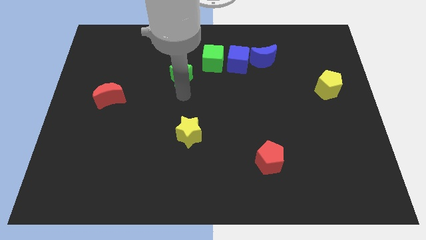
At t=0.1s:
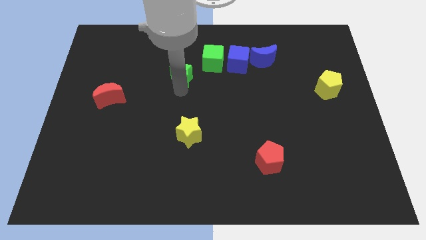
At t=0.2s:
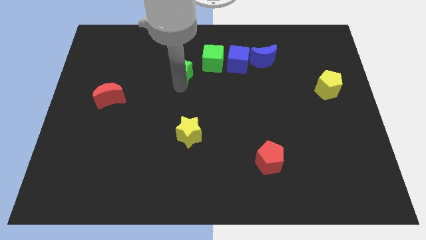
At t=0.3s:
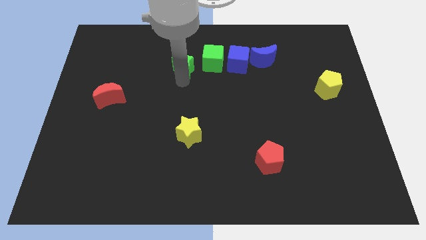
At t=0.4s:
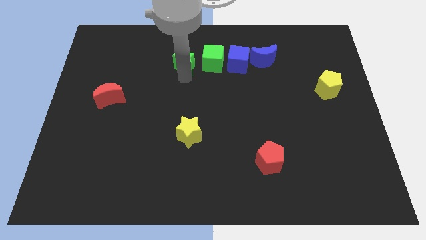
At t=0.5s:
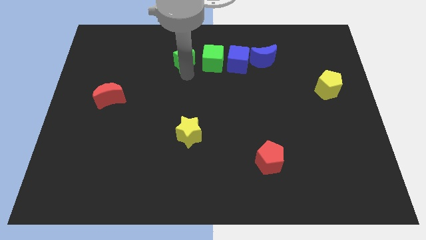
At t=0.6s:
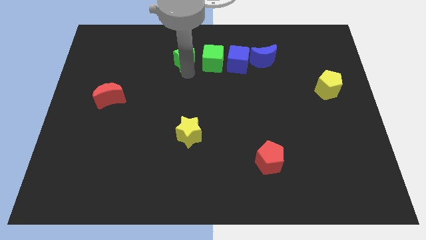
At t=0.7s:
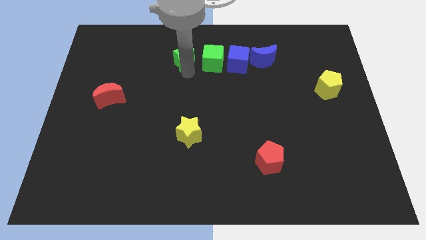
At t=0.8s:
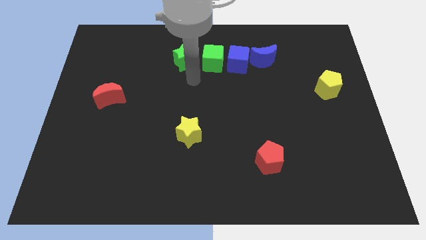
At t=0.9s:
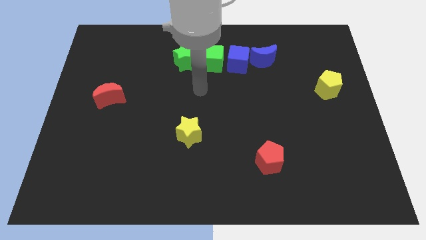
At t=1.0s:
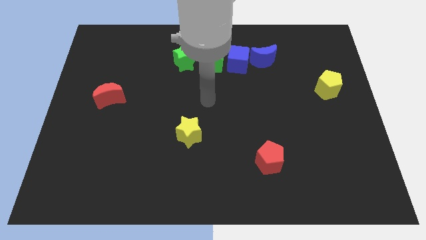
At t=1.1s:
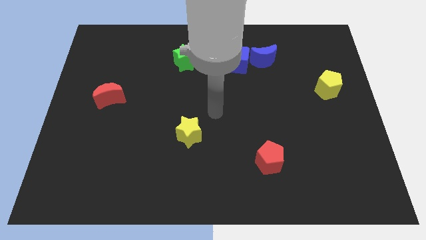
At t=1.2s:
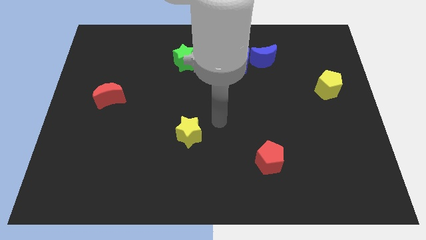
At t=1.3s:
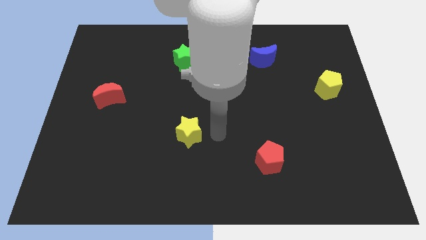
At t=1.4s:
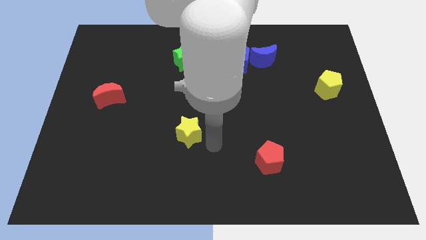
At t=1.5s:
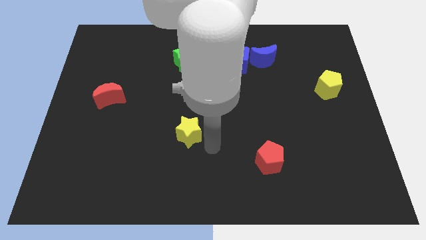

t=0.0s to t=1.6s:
put the green star diagonal to the red crescent

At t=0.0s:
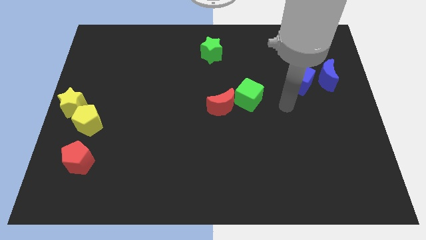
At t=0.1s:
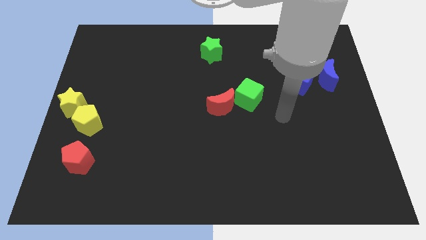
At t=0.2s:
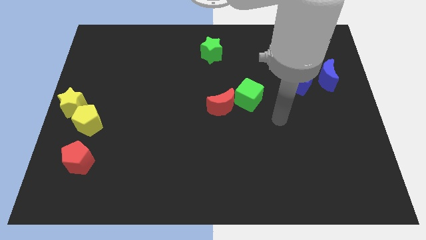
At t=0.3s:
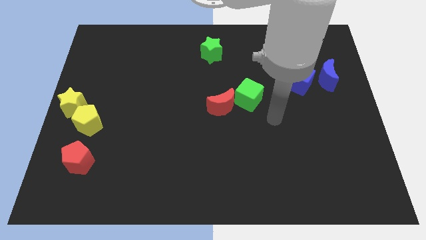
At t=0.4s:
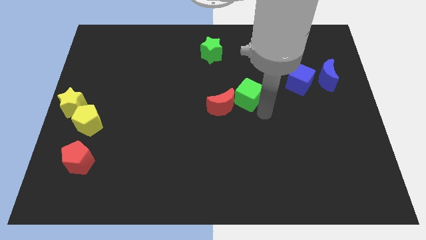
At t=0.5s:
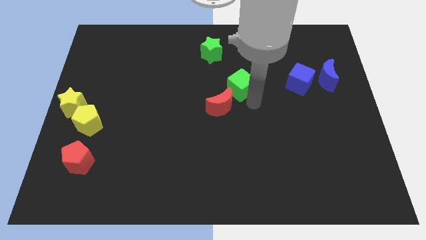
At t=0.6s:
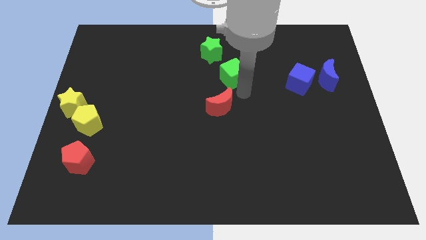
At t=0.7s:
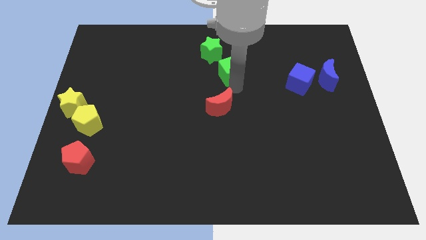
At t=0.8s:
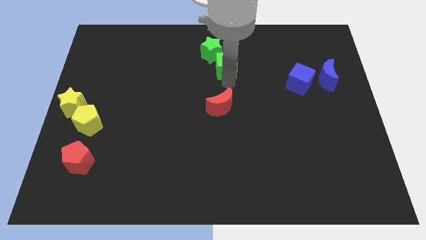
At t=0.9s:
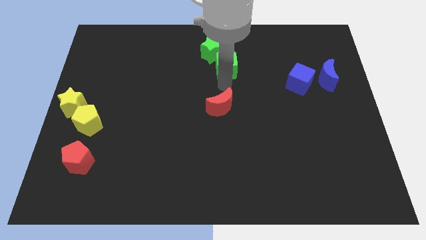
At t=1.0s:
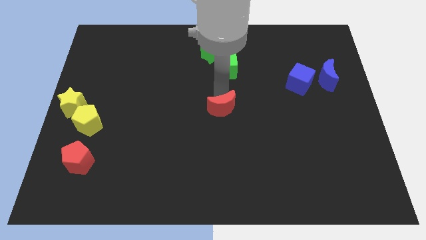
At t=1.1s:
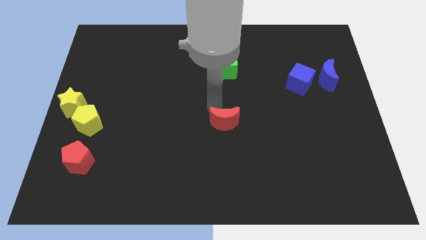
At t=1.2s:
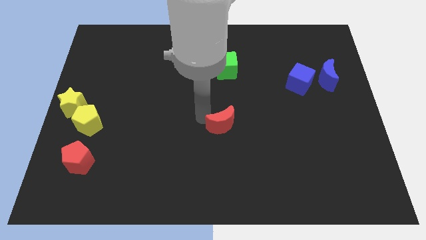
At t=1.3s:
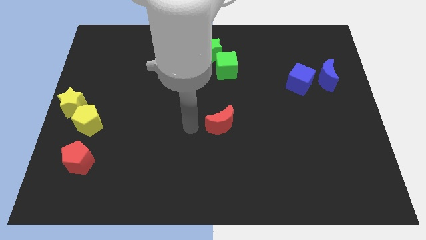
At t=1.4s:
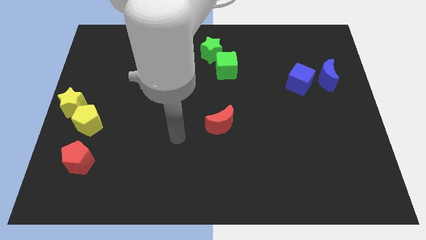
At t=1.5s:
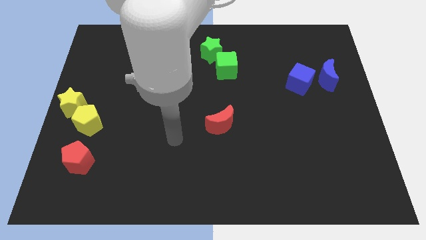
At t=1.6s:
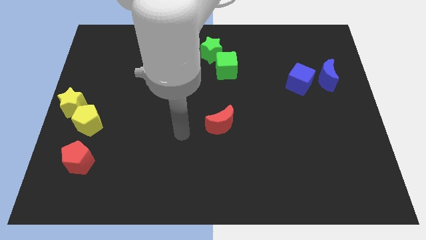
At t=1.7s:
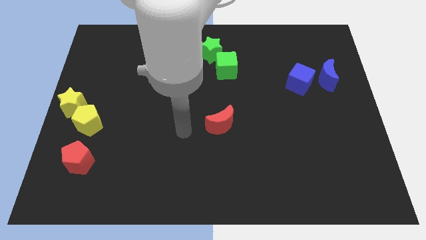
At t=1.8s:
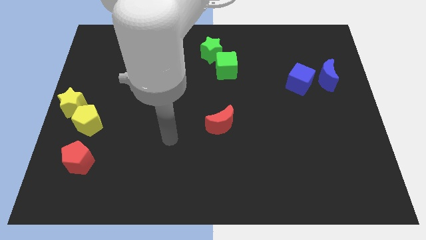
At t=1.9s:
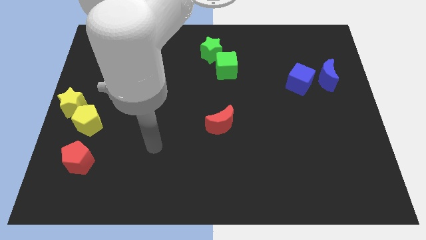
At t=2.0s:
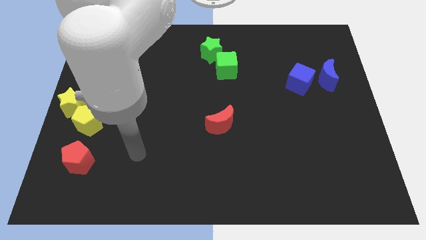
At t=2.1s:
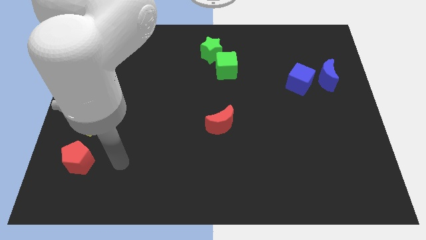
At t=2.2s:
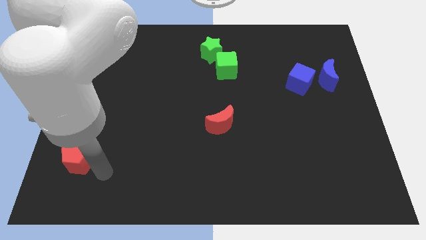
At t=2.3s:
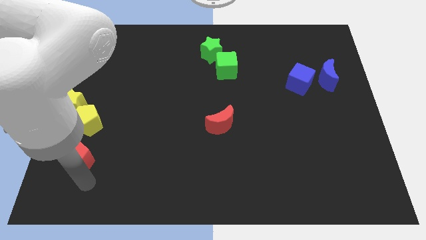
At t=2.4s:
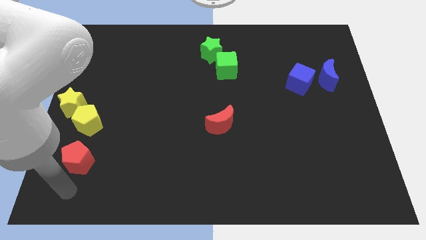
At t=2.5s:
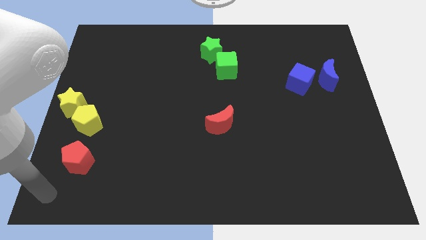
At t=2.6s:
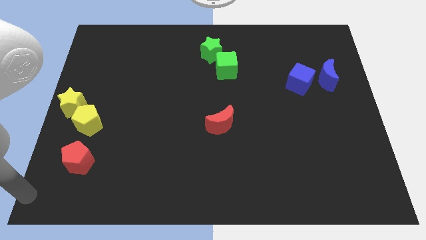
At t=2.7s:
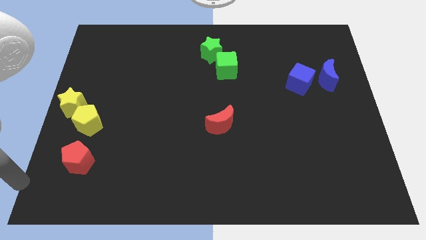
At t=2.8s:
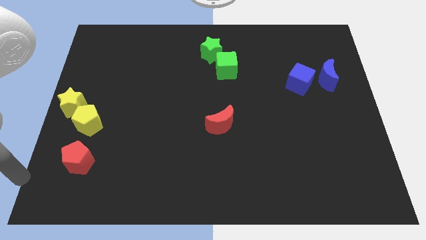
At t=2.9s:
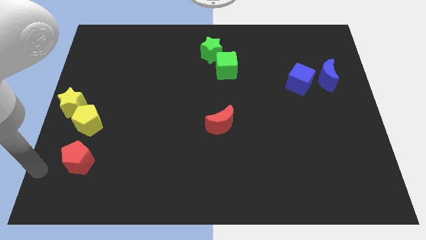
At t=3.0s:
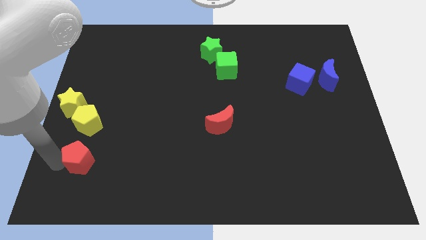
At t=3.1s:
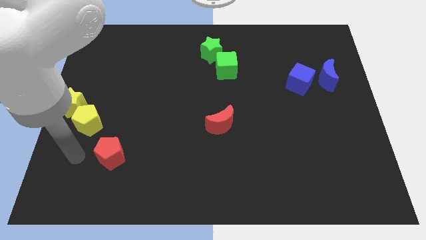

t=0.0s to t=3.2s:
separate the green cube and red moon

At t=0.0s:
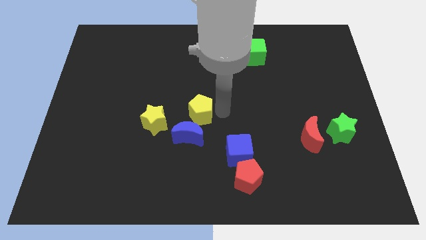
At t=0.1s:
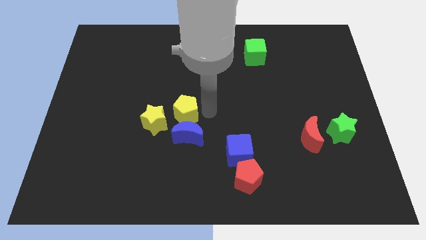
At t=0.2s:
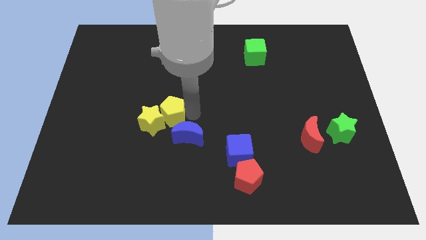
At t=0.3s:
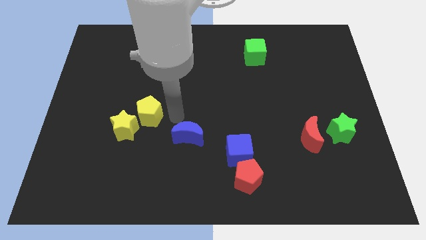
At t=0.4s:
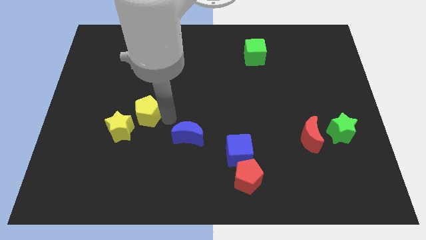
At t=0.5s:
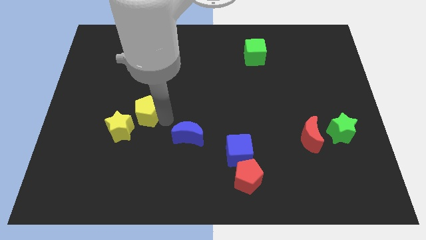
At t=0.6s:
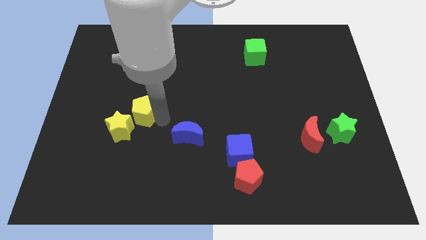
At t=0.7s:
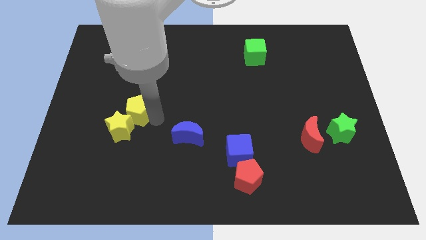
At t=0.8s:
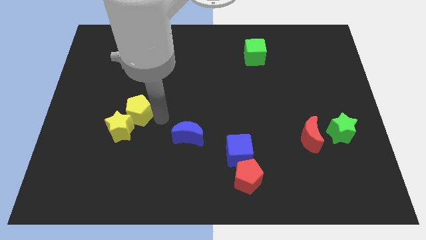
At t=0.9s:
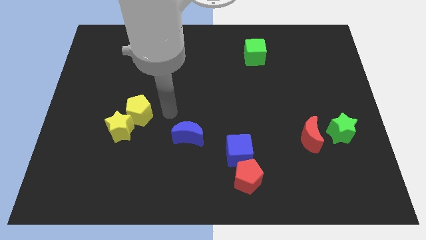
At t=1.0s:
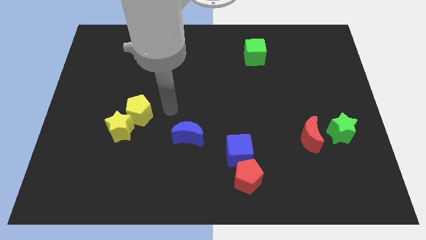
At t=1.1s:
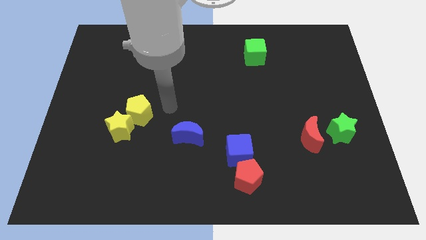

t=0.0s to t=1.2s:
push the yellow pentagon above the yellow star

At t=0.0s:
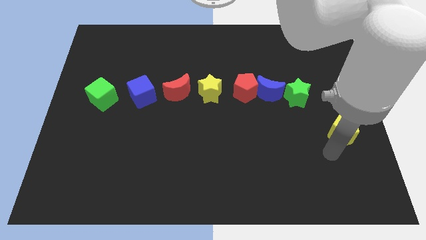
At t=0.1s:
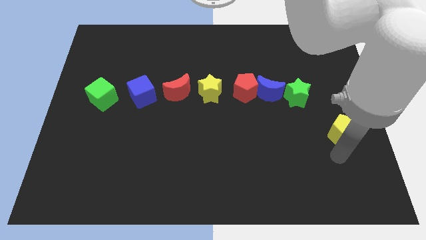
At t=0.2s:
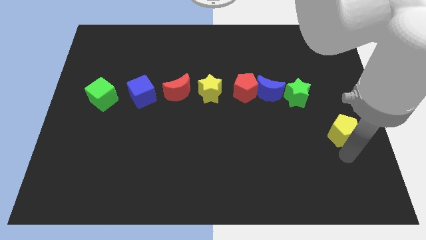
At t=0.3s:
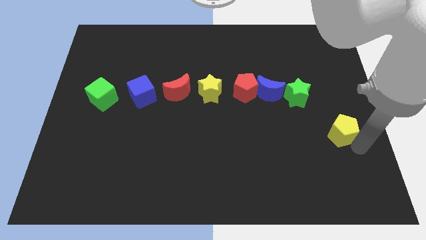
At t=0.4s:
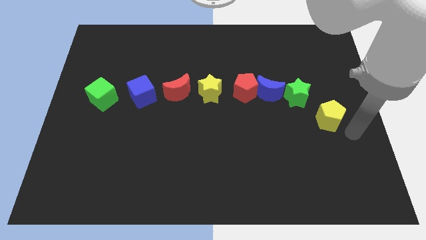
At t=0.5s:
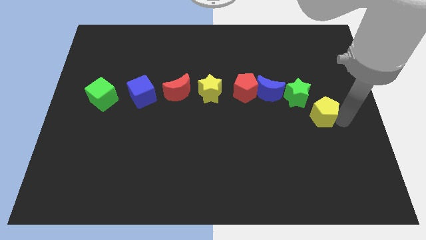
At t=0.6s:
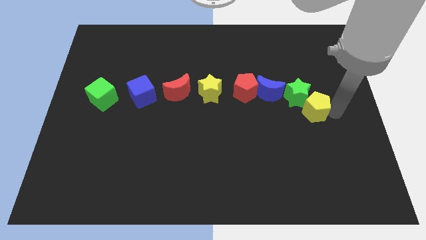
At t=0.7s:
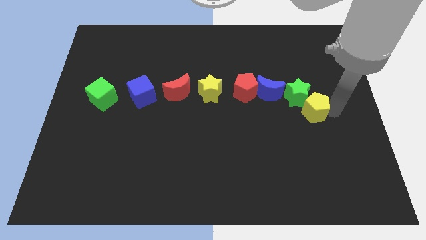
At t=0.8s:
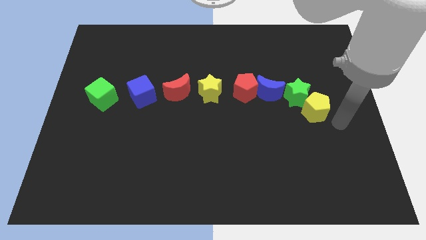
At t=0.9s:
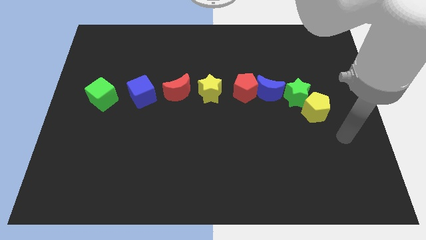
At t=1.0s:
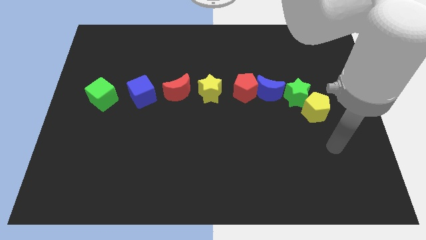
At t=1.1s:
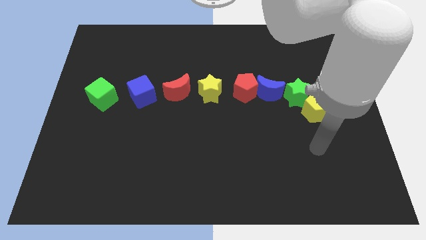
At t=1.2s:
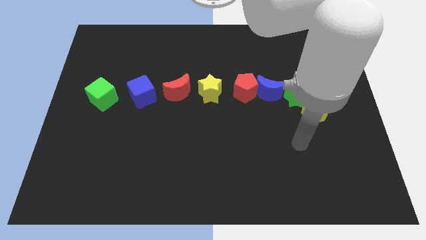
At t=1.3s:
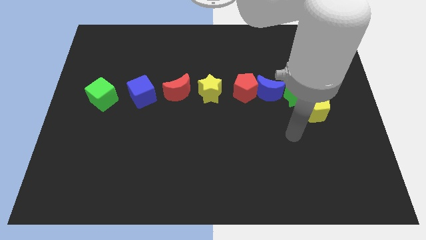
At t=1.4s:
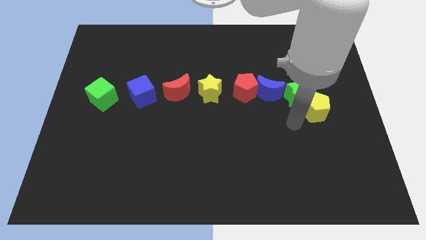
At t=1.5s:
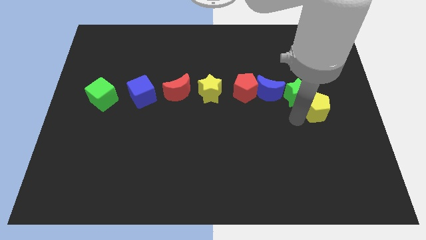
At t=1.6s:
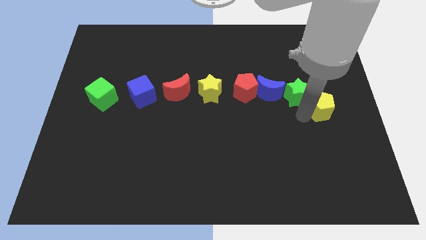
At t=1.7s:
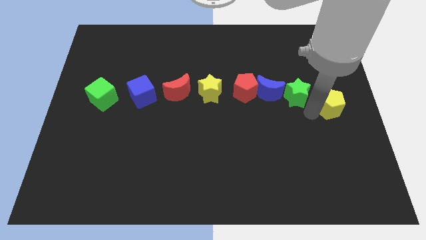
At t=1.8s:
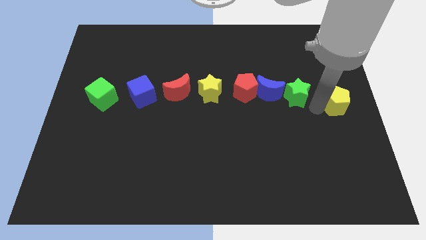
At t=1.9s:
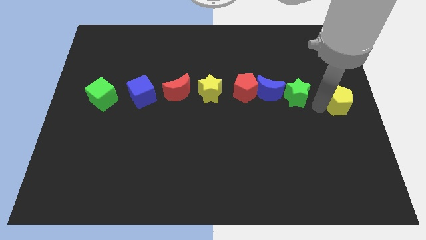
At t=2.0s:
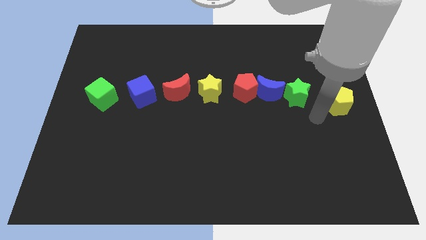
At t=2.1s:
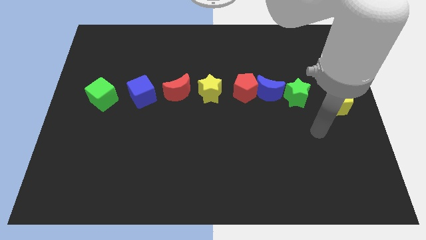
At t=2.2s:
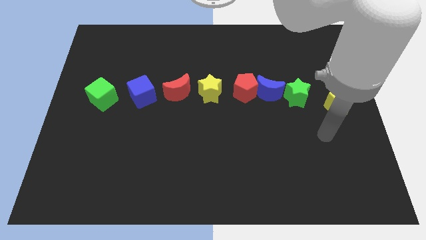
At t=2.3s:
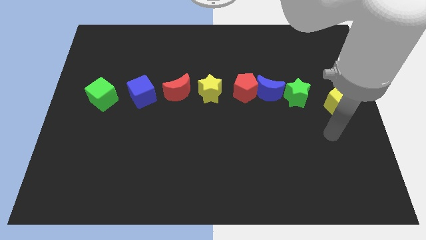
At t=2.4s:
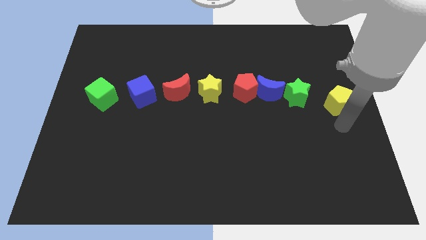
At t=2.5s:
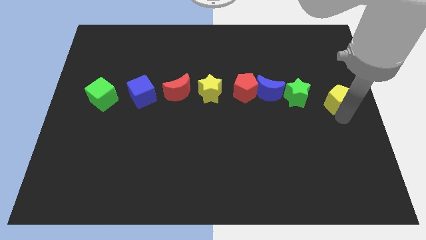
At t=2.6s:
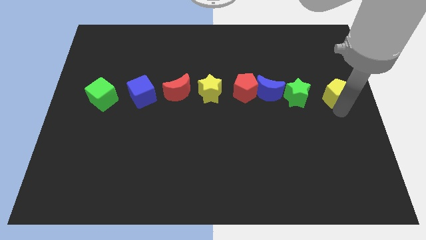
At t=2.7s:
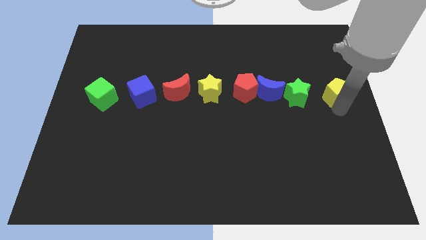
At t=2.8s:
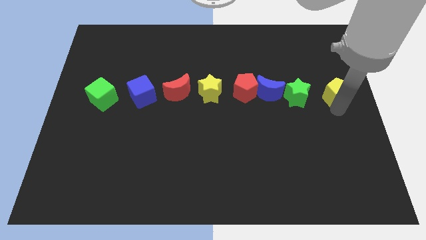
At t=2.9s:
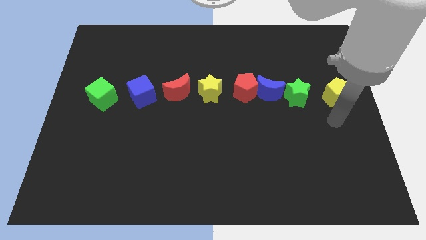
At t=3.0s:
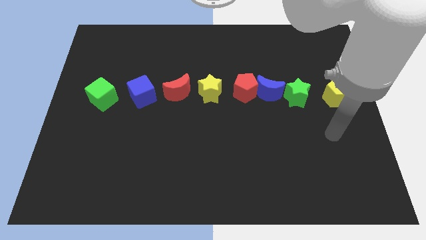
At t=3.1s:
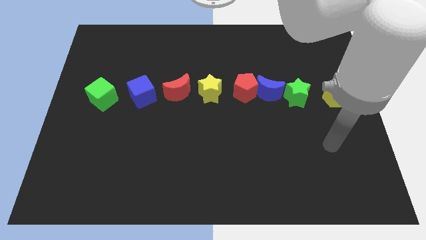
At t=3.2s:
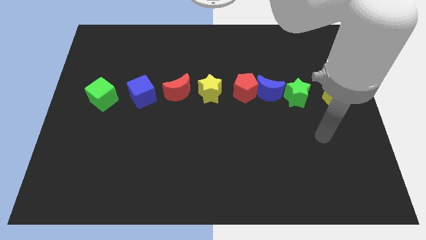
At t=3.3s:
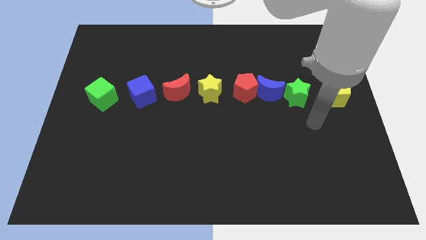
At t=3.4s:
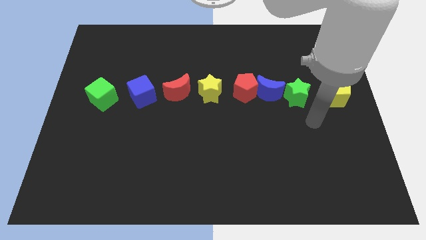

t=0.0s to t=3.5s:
place the yellow pentagon towards the green star
